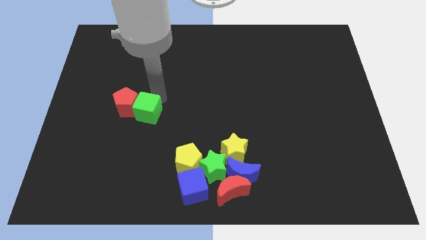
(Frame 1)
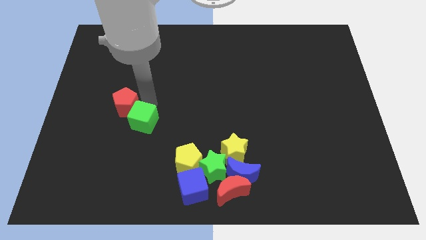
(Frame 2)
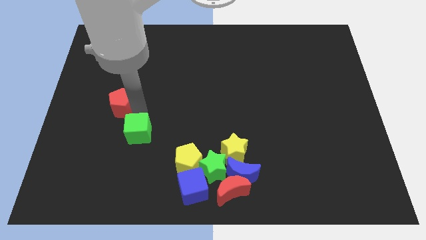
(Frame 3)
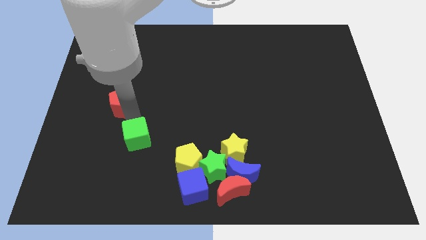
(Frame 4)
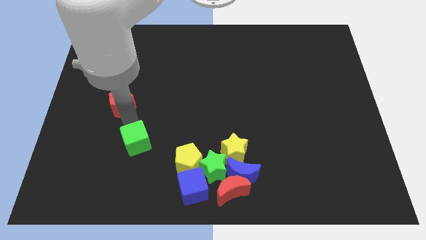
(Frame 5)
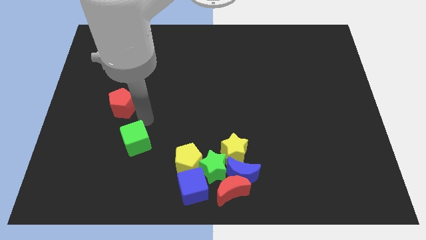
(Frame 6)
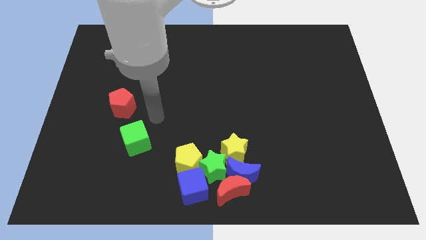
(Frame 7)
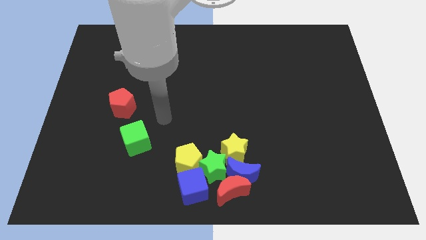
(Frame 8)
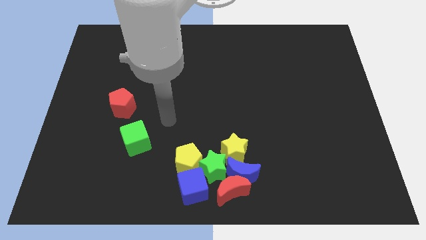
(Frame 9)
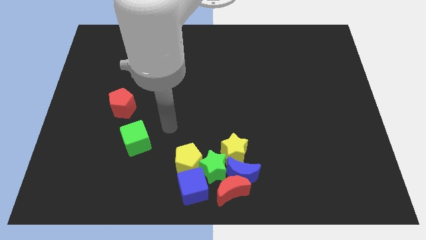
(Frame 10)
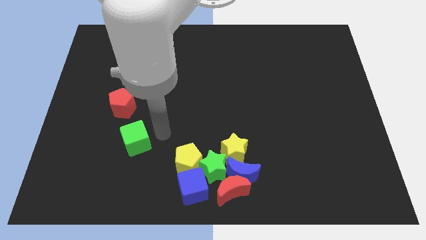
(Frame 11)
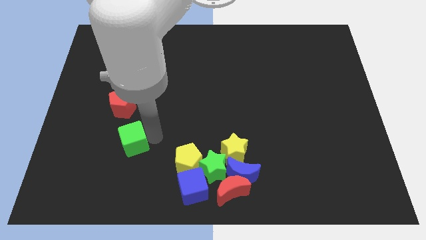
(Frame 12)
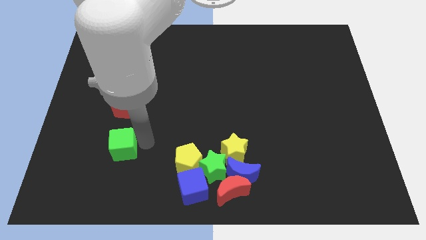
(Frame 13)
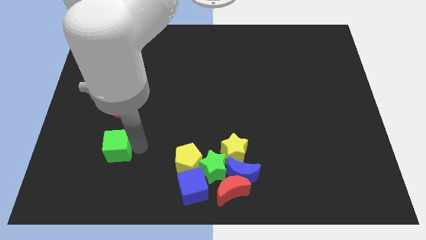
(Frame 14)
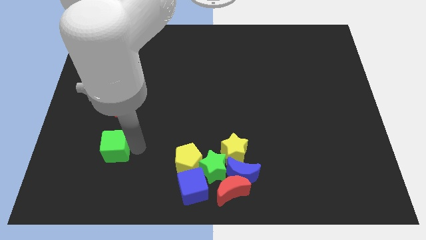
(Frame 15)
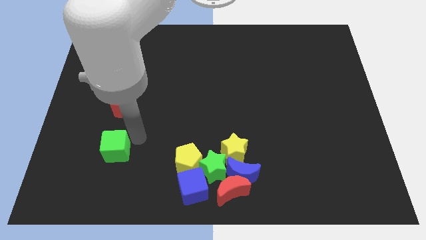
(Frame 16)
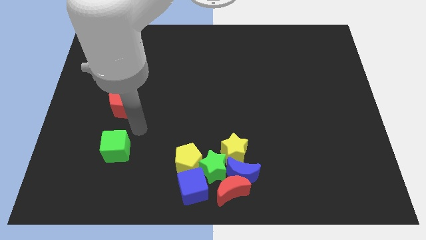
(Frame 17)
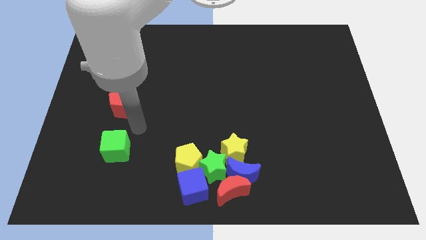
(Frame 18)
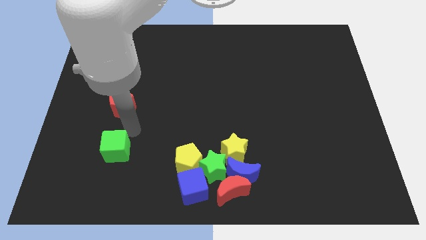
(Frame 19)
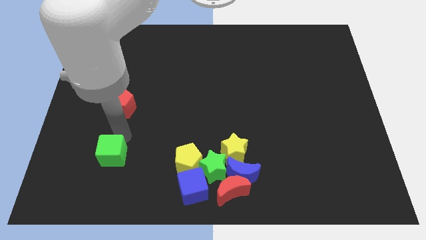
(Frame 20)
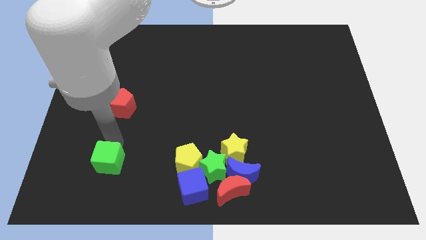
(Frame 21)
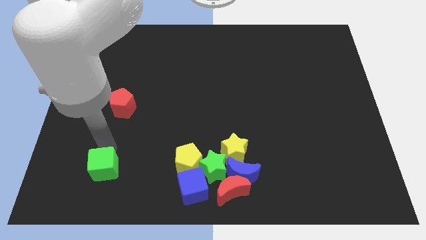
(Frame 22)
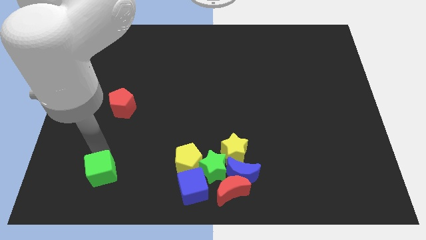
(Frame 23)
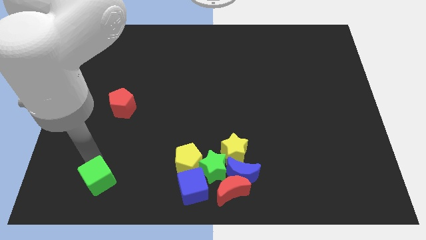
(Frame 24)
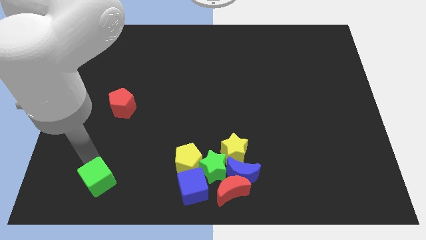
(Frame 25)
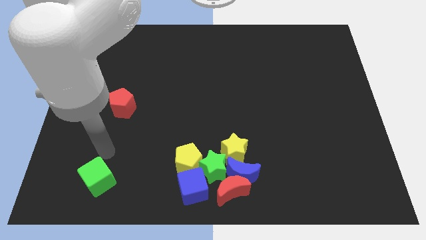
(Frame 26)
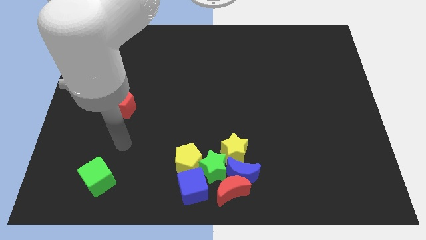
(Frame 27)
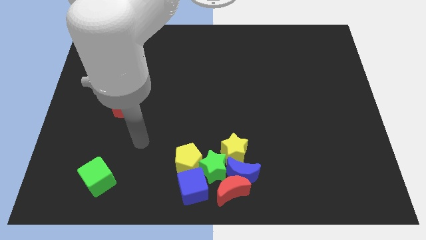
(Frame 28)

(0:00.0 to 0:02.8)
place the green cube parallel to the group of blocks

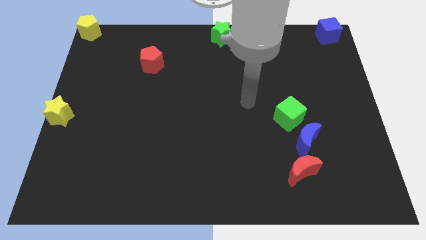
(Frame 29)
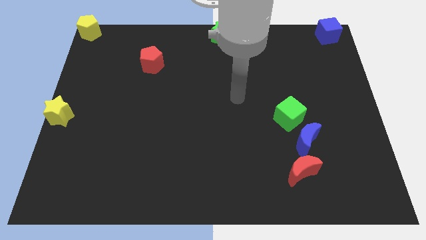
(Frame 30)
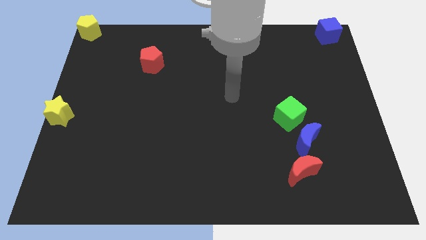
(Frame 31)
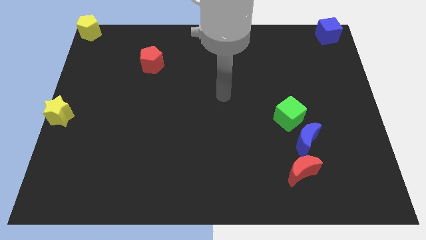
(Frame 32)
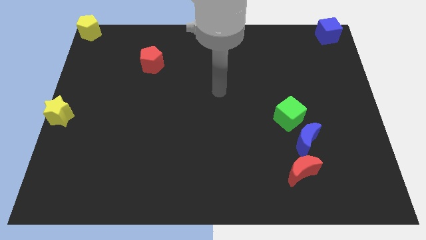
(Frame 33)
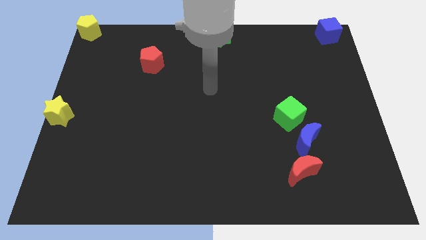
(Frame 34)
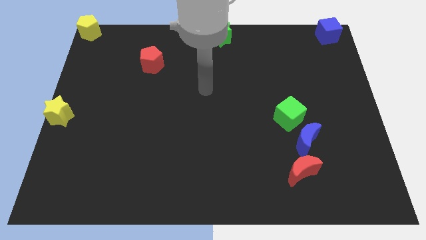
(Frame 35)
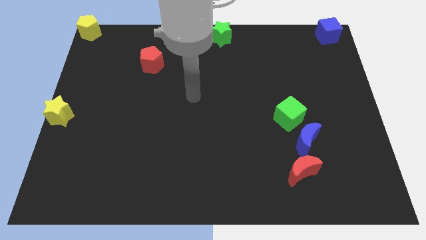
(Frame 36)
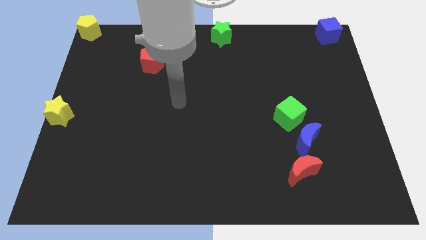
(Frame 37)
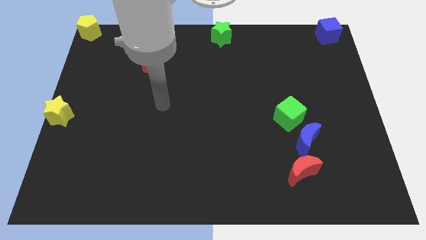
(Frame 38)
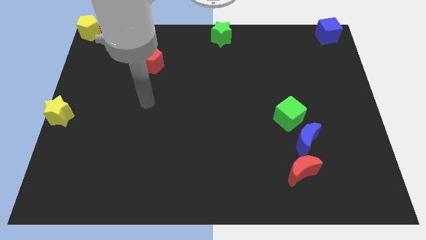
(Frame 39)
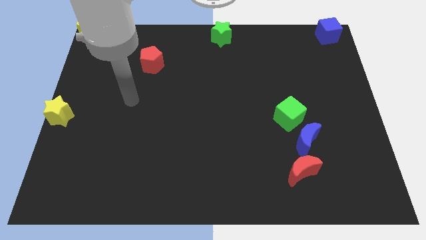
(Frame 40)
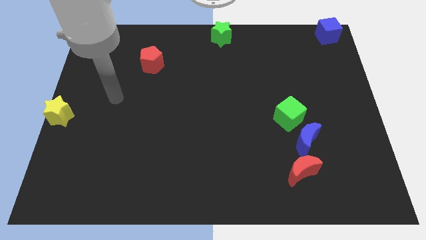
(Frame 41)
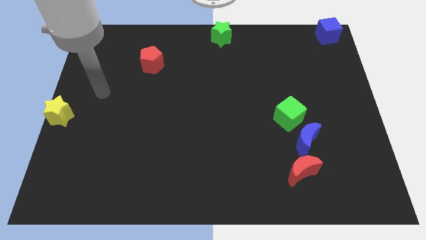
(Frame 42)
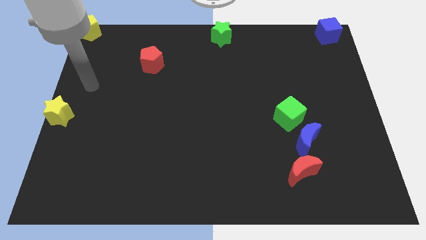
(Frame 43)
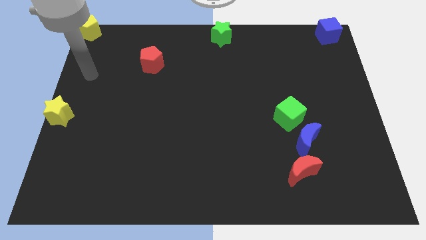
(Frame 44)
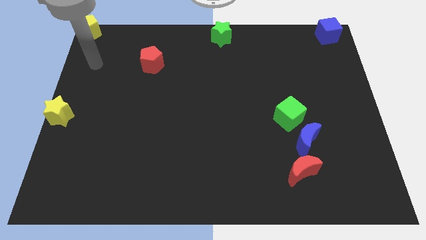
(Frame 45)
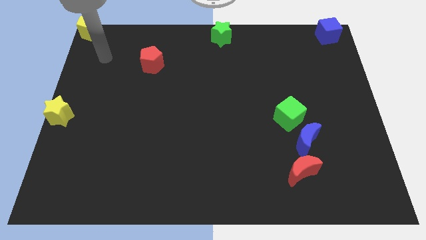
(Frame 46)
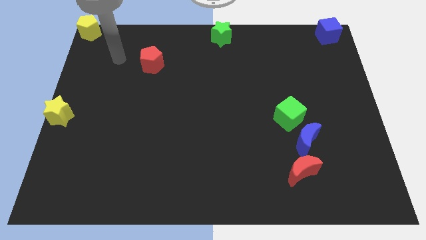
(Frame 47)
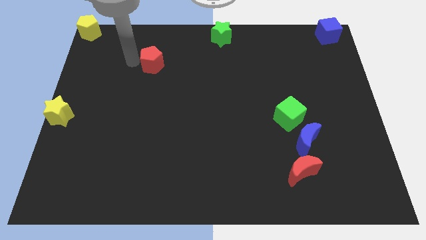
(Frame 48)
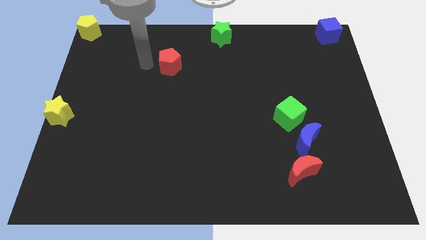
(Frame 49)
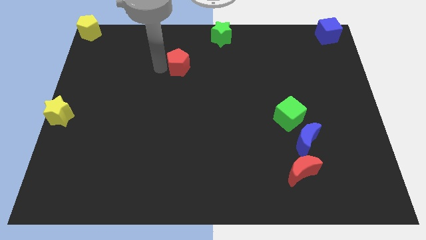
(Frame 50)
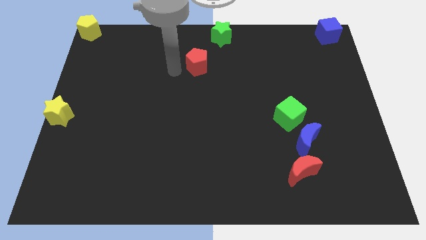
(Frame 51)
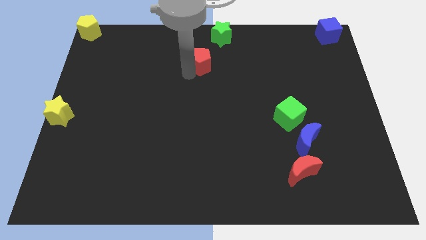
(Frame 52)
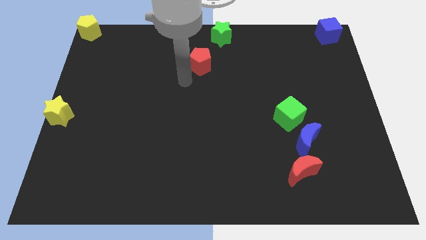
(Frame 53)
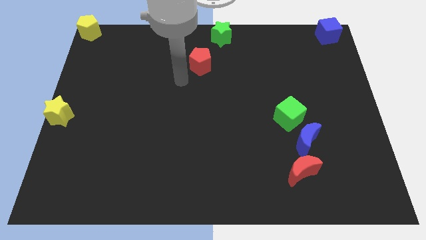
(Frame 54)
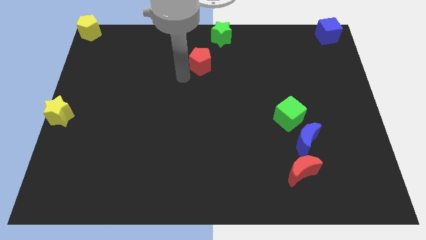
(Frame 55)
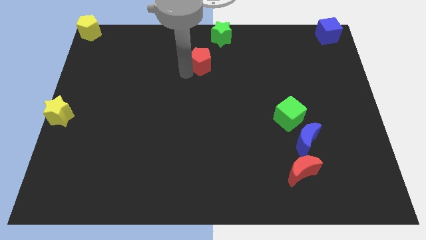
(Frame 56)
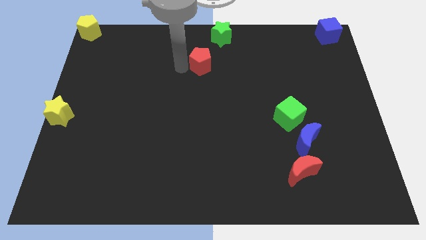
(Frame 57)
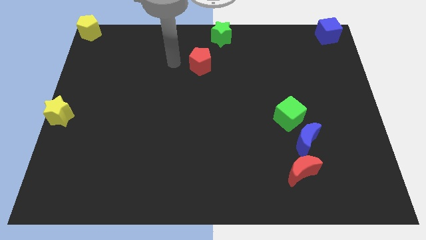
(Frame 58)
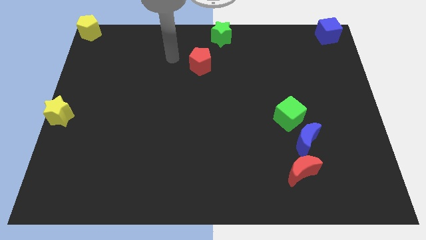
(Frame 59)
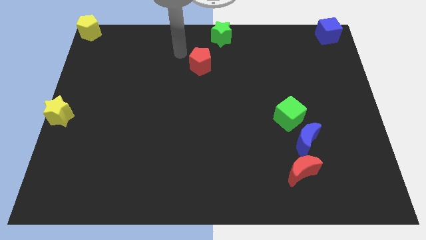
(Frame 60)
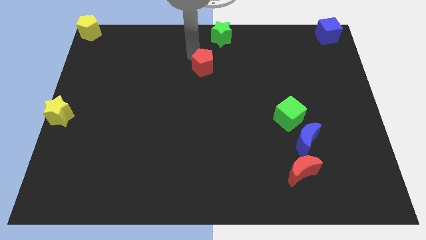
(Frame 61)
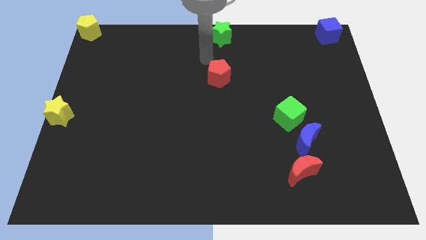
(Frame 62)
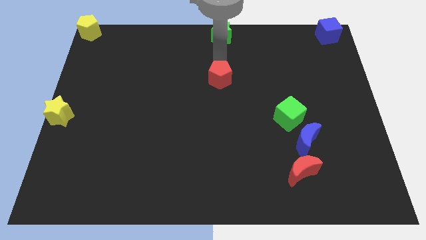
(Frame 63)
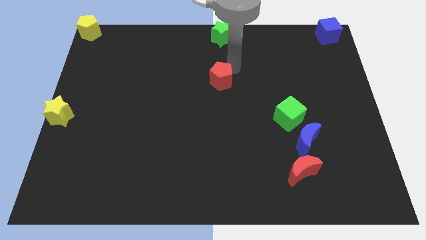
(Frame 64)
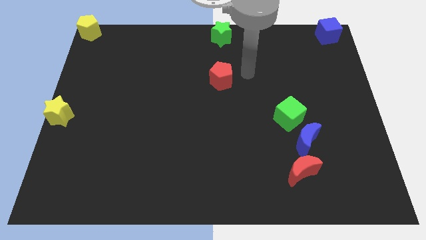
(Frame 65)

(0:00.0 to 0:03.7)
move the red pentagon below the green star

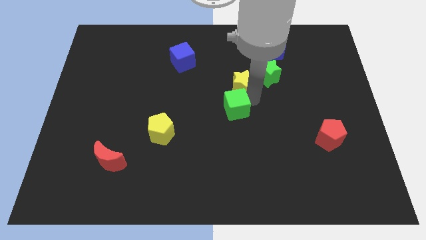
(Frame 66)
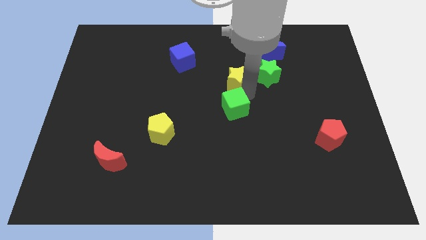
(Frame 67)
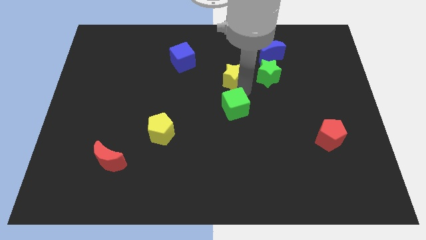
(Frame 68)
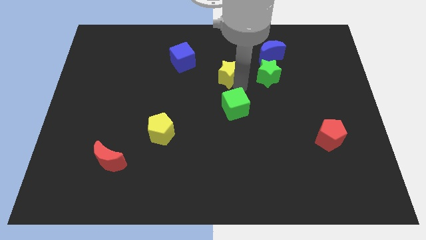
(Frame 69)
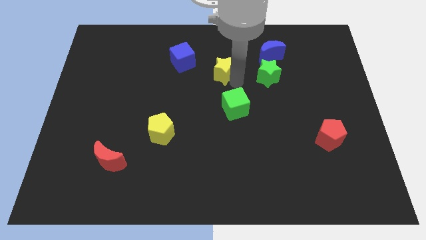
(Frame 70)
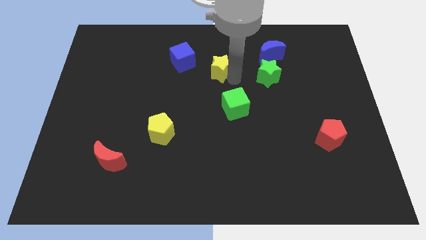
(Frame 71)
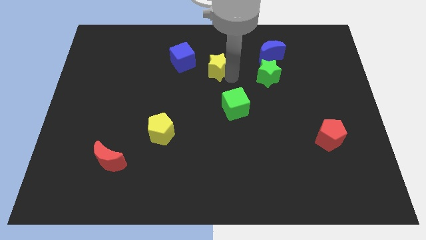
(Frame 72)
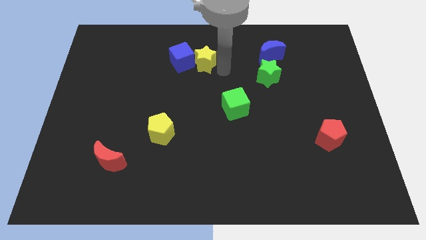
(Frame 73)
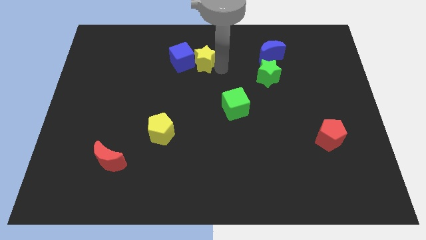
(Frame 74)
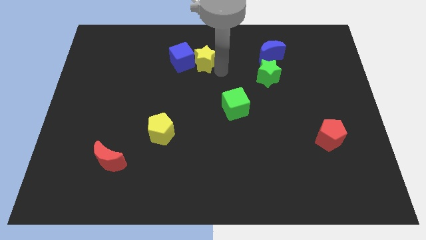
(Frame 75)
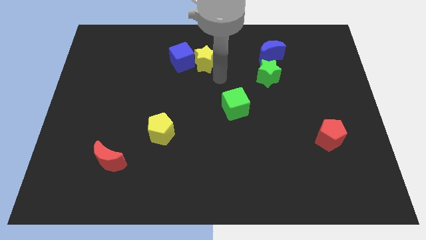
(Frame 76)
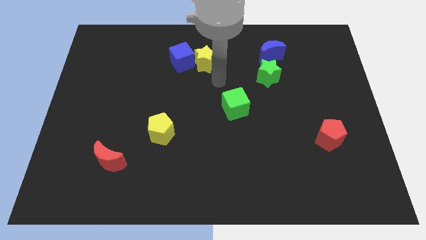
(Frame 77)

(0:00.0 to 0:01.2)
move yellow star into the blue cube

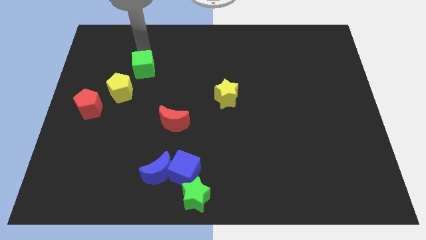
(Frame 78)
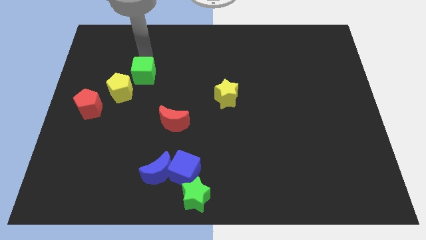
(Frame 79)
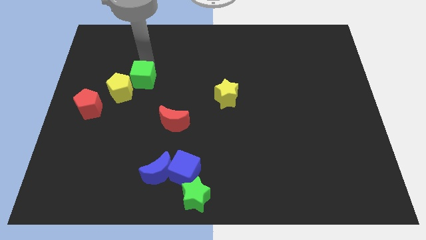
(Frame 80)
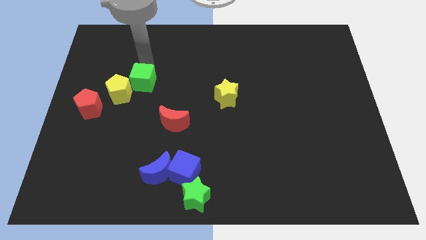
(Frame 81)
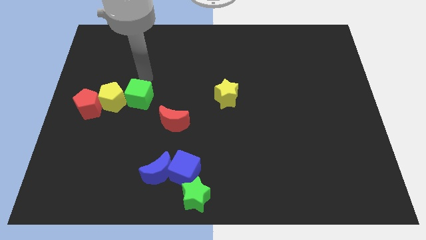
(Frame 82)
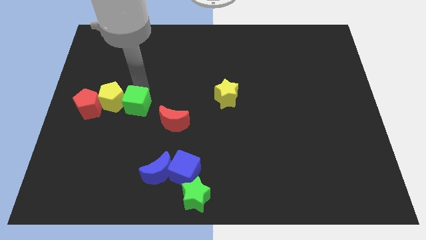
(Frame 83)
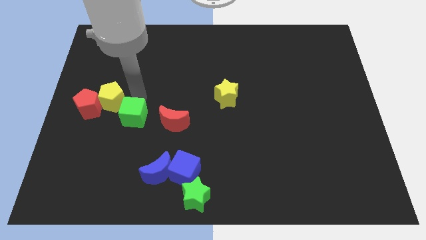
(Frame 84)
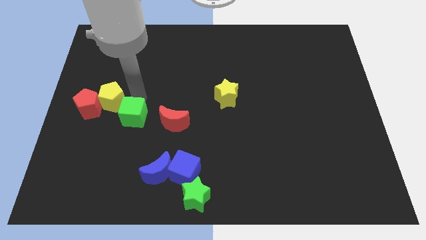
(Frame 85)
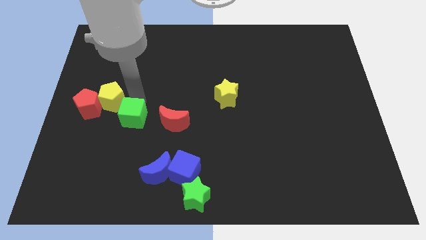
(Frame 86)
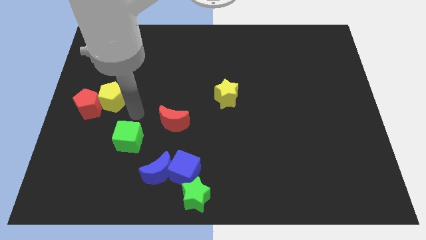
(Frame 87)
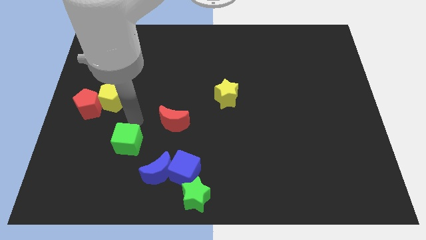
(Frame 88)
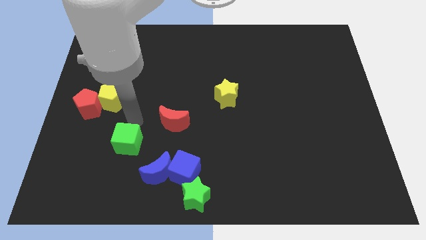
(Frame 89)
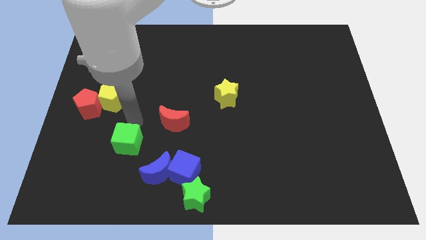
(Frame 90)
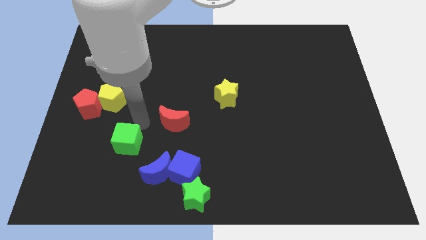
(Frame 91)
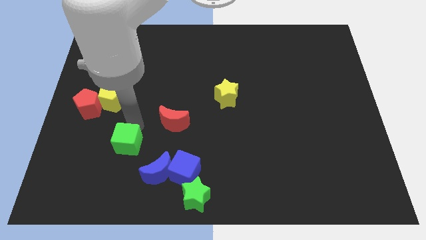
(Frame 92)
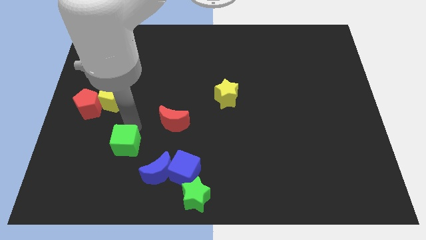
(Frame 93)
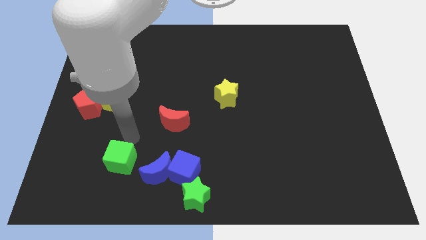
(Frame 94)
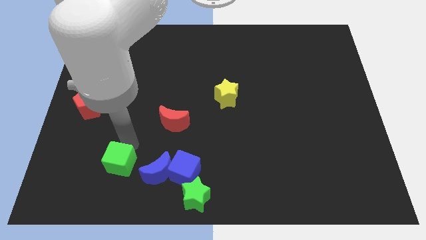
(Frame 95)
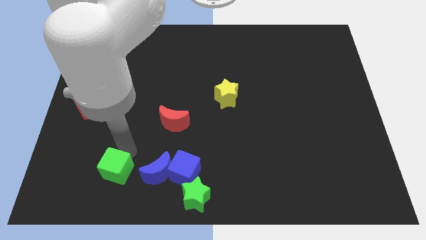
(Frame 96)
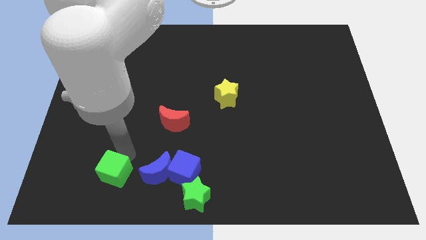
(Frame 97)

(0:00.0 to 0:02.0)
push the green cube to the left of blue moon
